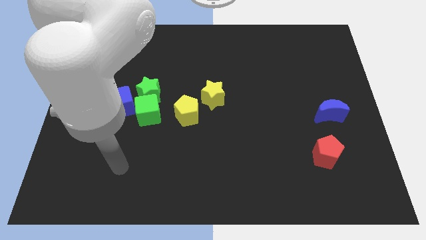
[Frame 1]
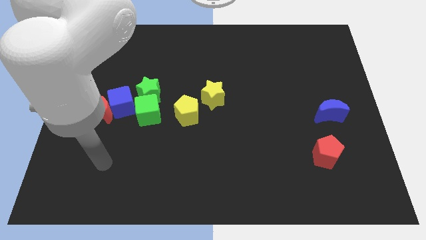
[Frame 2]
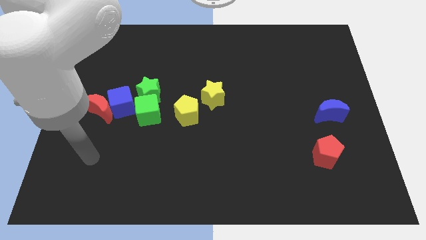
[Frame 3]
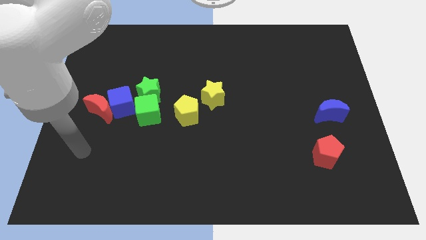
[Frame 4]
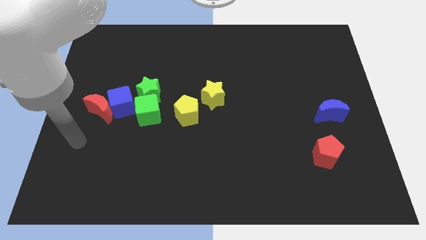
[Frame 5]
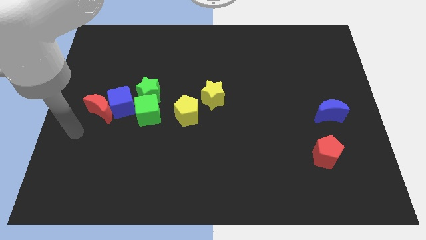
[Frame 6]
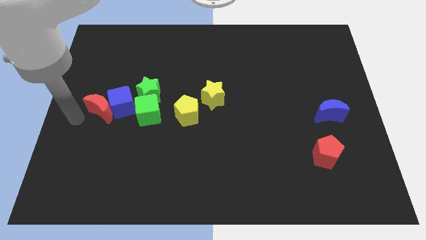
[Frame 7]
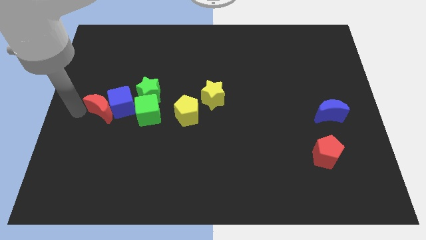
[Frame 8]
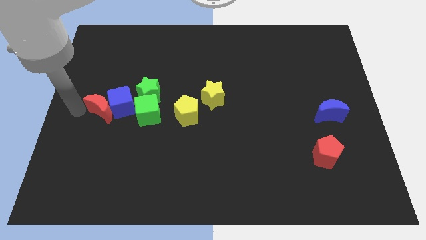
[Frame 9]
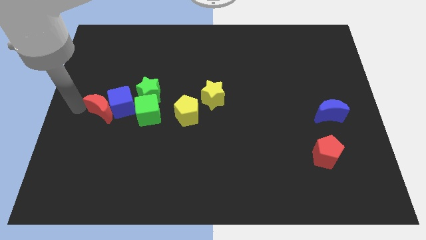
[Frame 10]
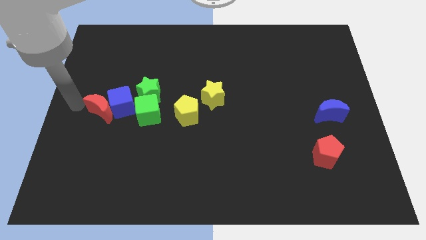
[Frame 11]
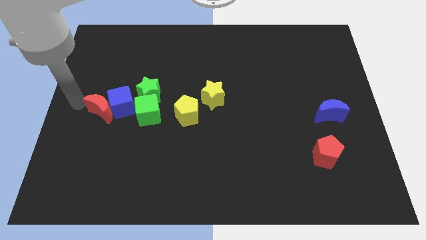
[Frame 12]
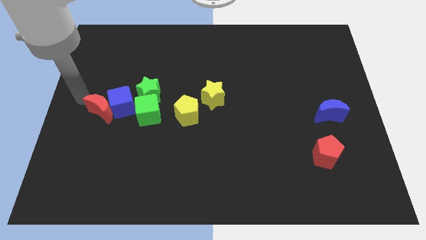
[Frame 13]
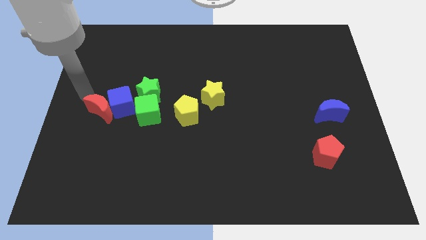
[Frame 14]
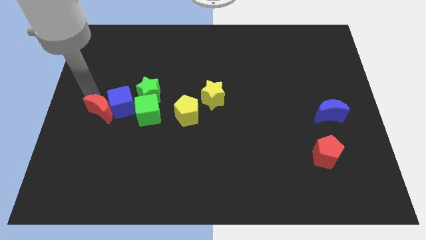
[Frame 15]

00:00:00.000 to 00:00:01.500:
move your arm to the top of the red crescent

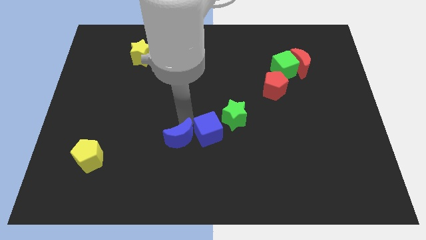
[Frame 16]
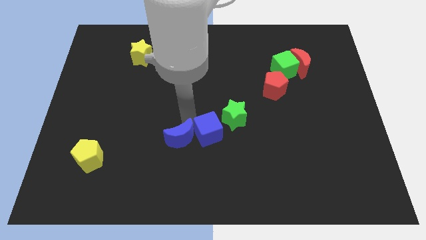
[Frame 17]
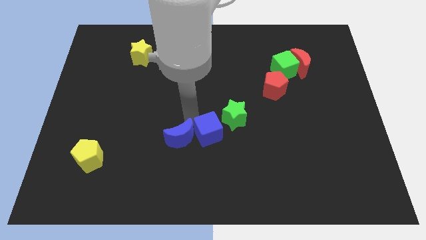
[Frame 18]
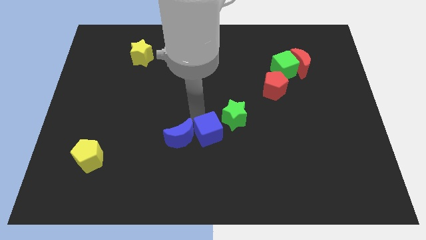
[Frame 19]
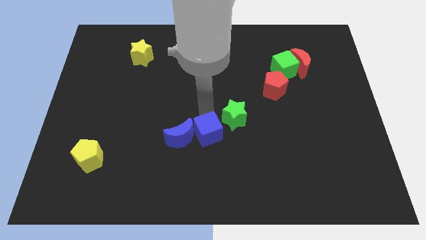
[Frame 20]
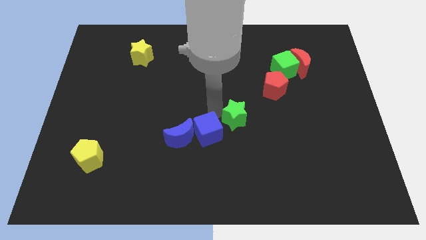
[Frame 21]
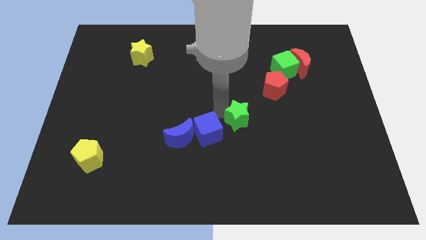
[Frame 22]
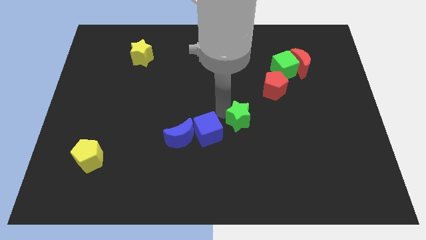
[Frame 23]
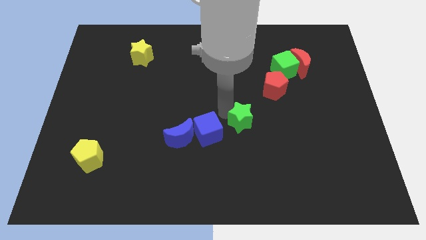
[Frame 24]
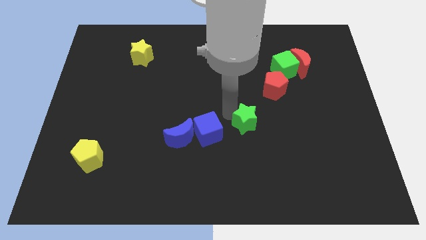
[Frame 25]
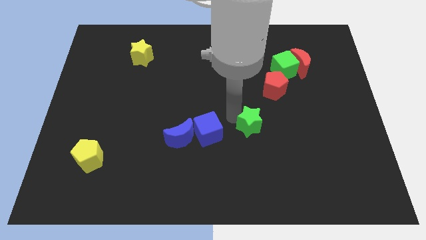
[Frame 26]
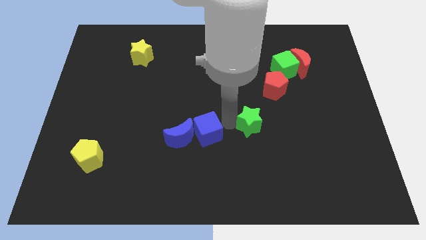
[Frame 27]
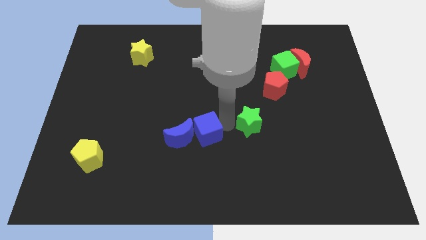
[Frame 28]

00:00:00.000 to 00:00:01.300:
place green star diagonal to the right of blue cube

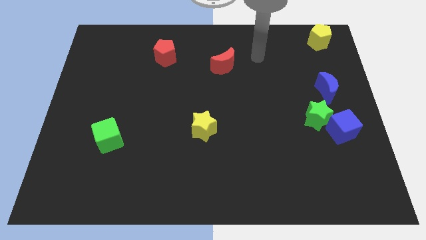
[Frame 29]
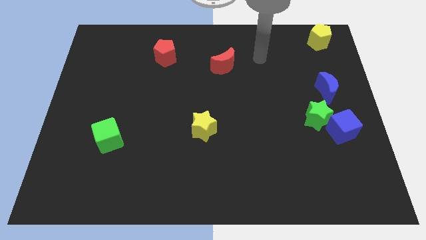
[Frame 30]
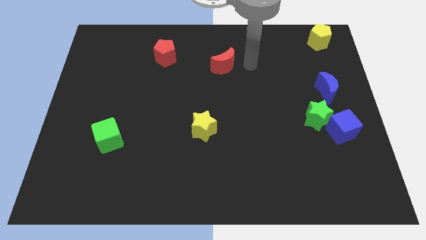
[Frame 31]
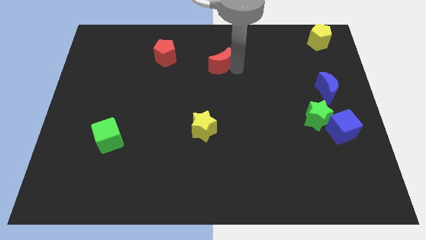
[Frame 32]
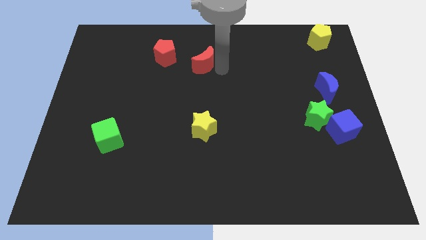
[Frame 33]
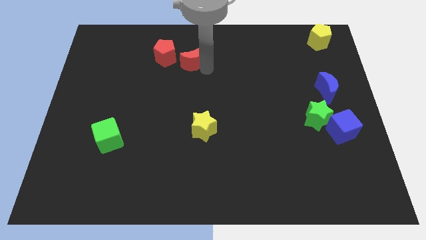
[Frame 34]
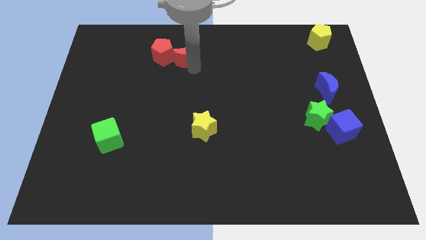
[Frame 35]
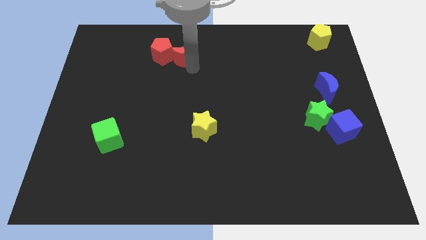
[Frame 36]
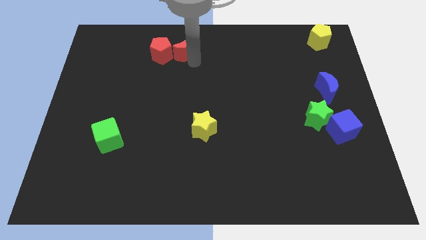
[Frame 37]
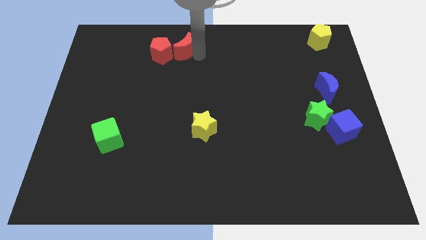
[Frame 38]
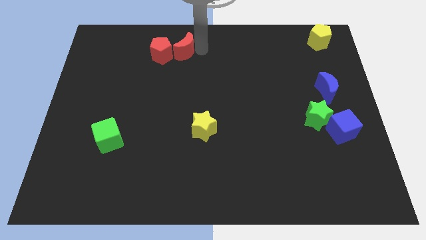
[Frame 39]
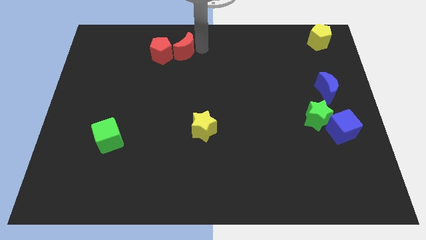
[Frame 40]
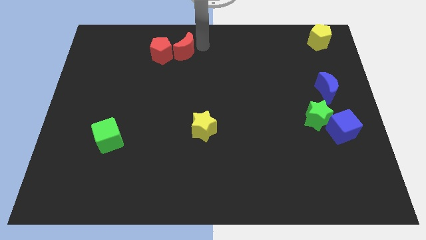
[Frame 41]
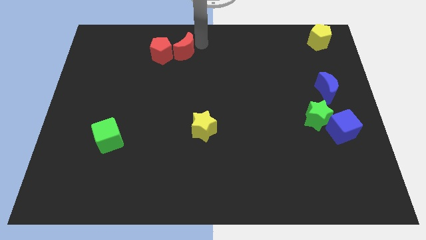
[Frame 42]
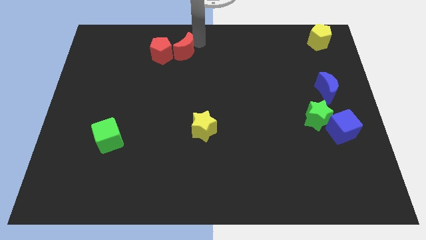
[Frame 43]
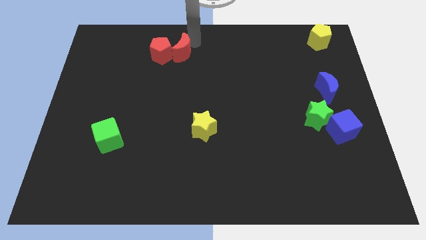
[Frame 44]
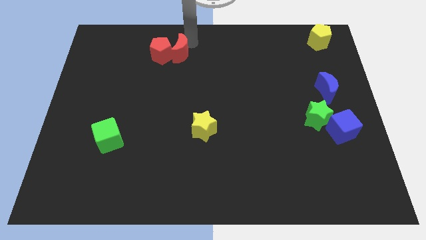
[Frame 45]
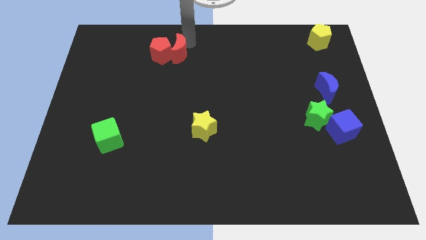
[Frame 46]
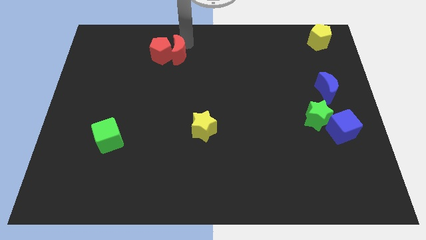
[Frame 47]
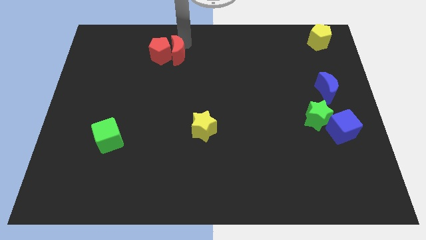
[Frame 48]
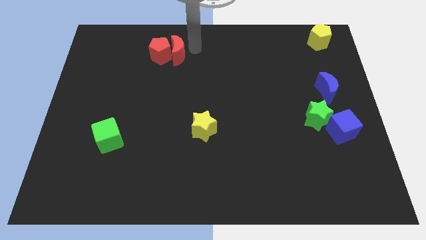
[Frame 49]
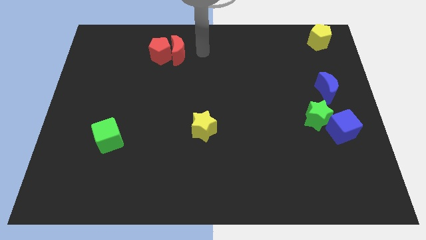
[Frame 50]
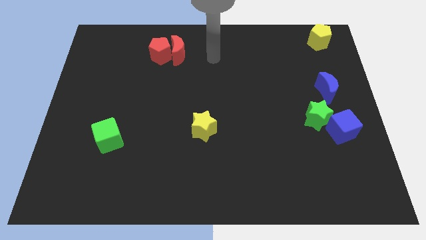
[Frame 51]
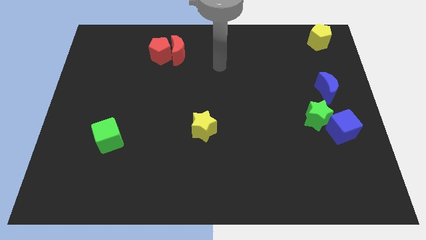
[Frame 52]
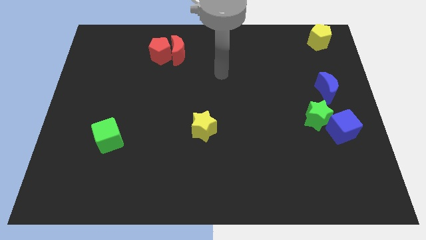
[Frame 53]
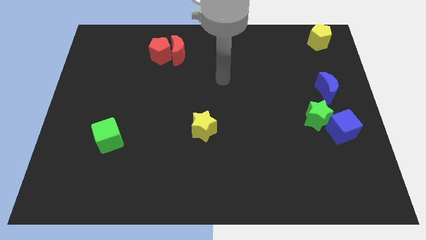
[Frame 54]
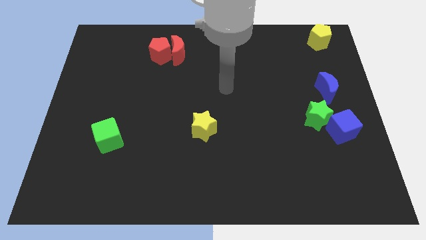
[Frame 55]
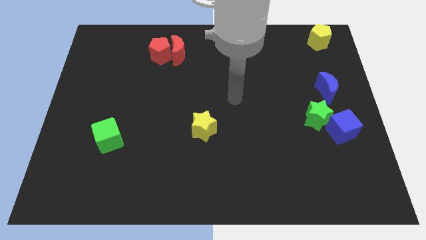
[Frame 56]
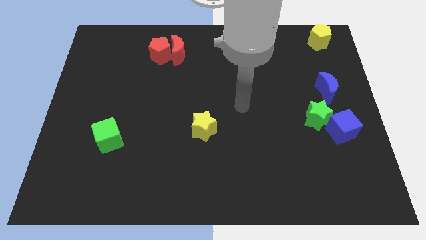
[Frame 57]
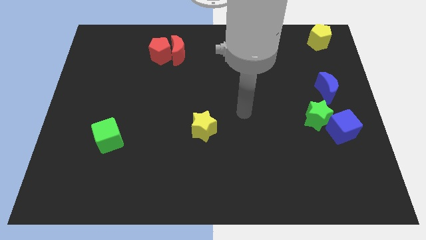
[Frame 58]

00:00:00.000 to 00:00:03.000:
move red crescent into the red pentagon

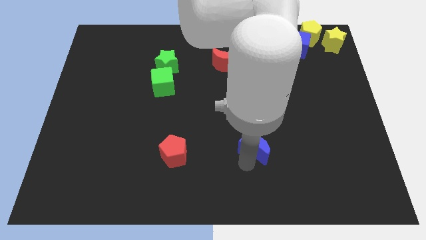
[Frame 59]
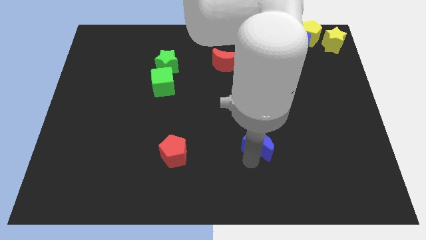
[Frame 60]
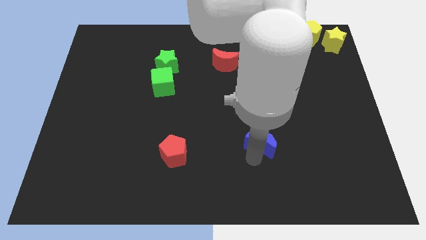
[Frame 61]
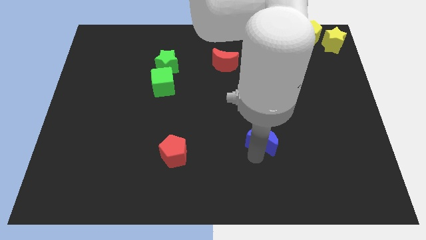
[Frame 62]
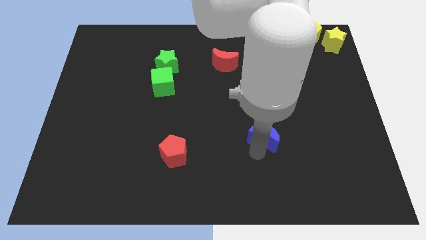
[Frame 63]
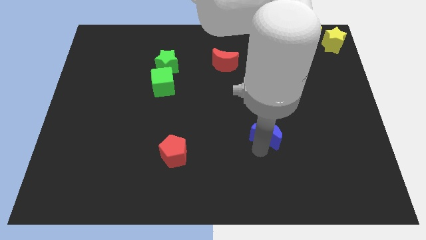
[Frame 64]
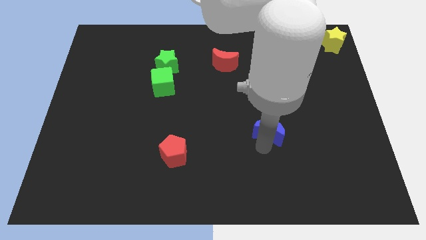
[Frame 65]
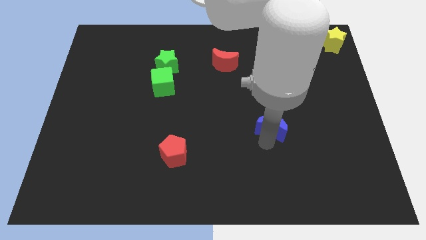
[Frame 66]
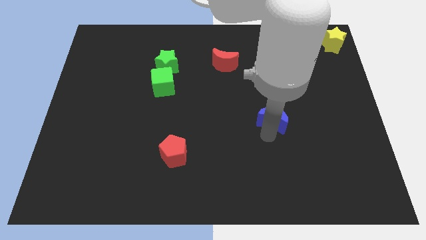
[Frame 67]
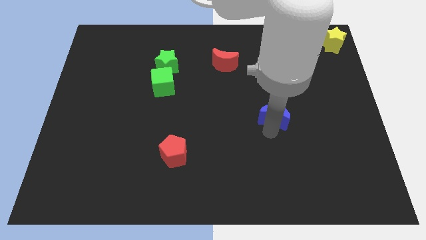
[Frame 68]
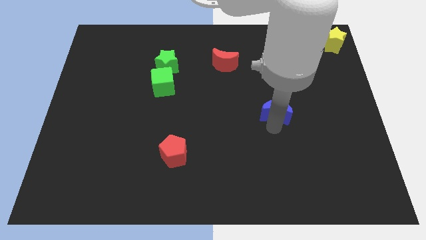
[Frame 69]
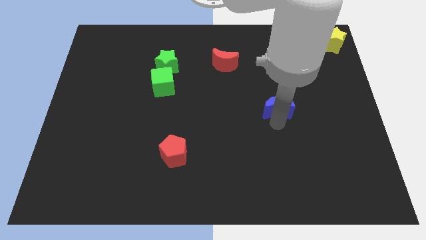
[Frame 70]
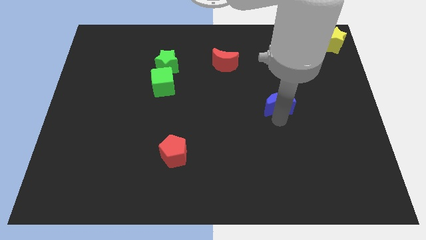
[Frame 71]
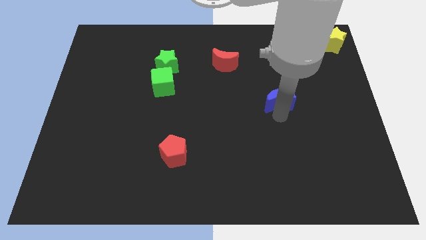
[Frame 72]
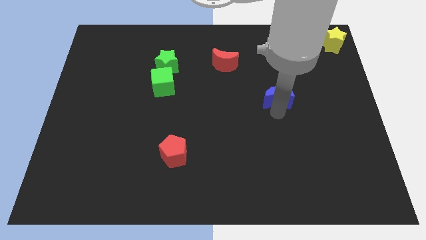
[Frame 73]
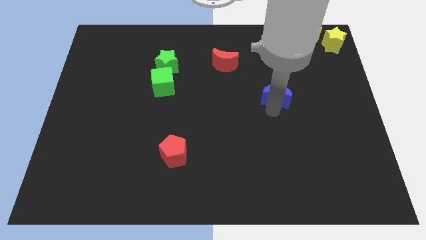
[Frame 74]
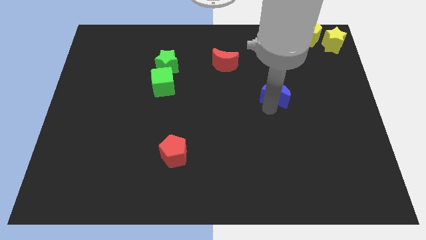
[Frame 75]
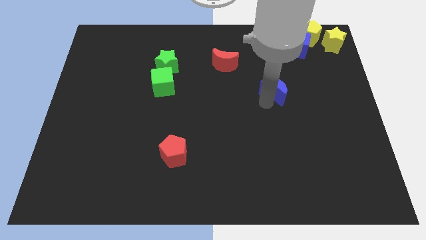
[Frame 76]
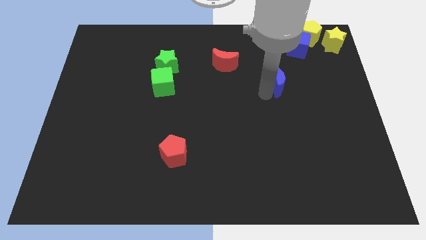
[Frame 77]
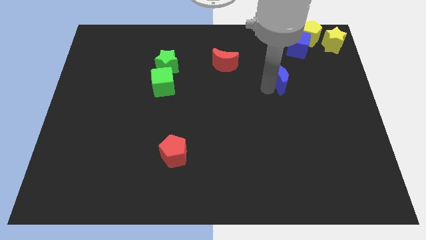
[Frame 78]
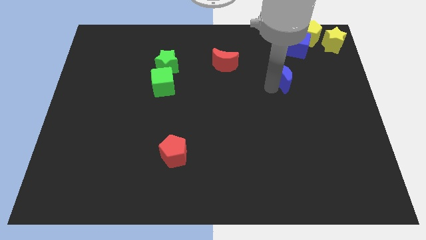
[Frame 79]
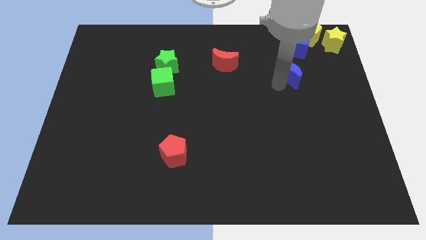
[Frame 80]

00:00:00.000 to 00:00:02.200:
slide the blue moon towards the blue cube

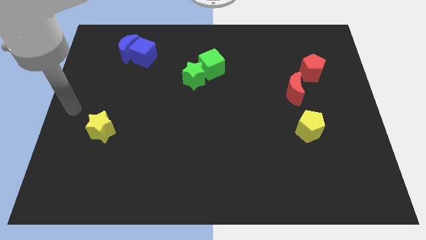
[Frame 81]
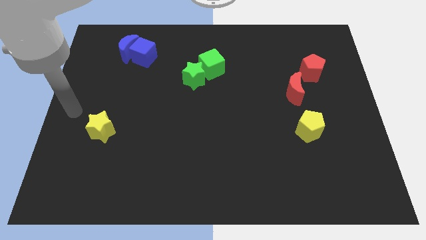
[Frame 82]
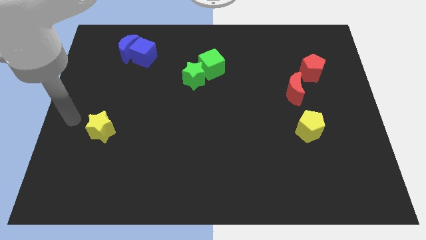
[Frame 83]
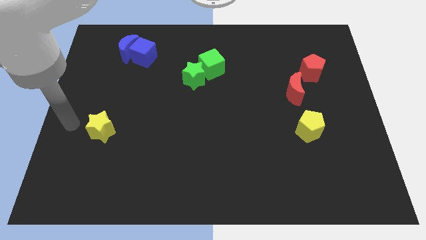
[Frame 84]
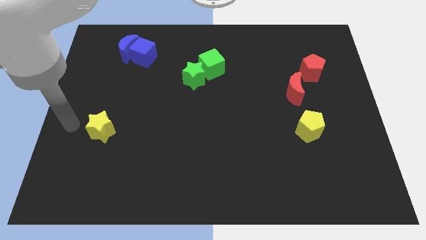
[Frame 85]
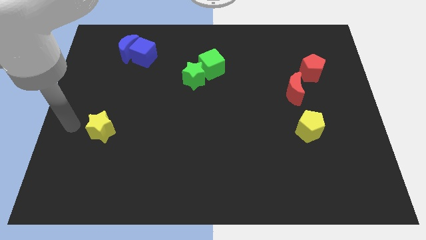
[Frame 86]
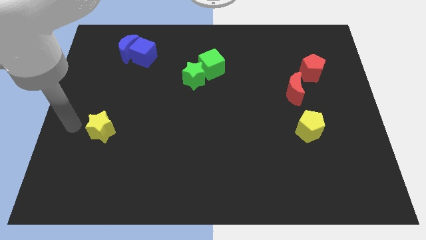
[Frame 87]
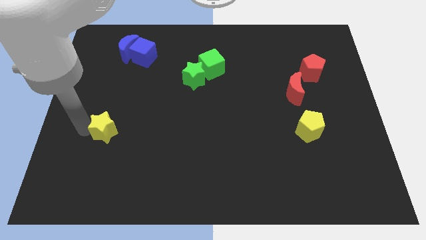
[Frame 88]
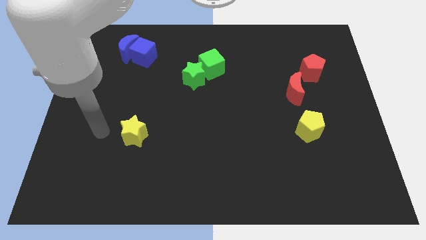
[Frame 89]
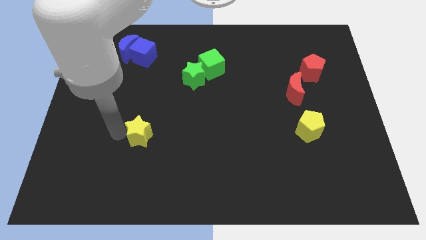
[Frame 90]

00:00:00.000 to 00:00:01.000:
move the yellow star to the bottom of the blue cube
